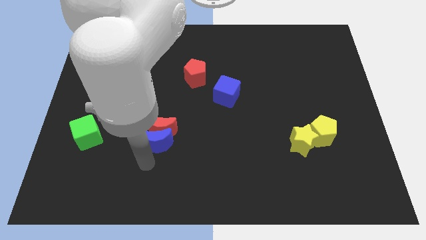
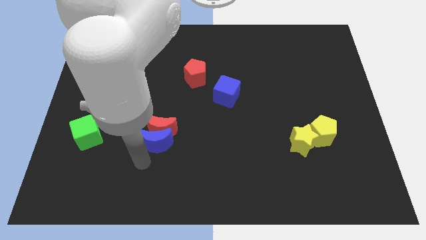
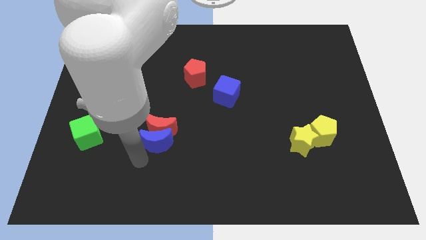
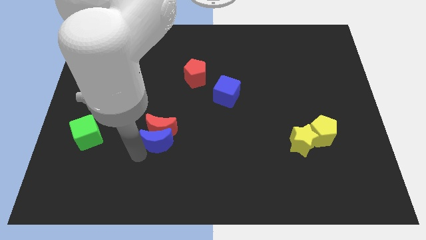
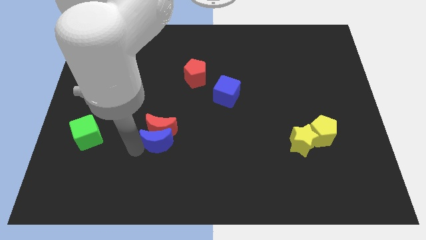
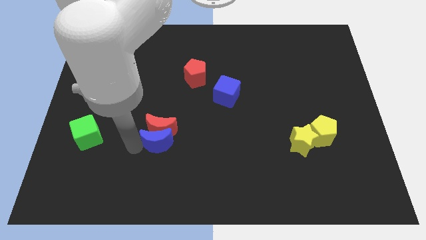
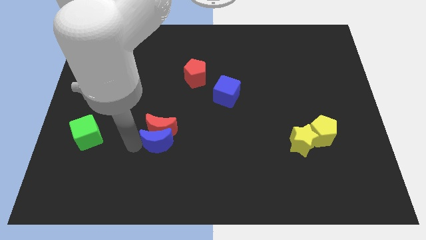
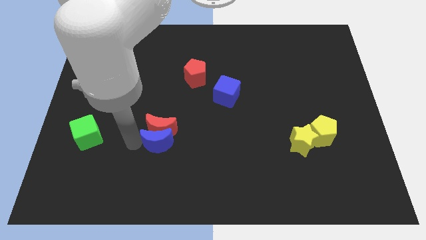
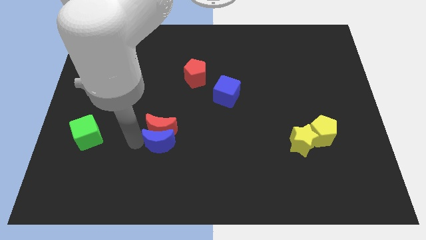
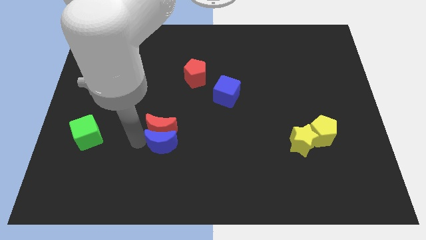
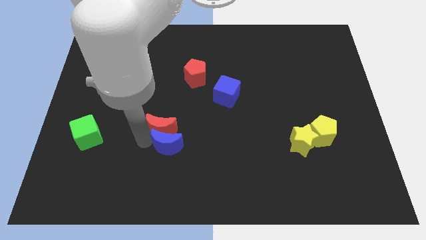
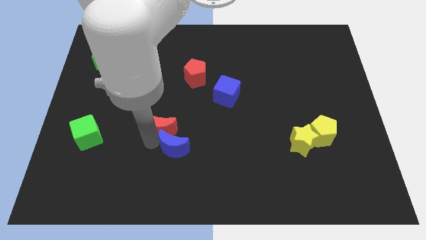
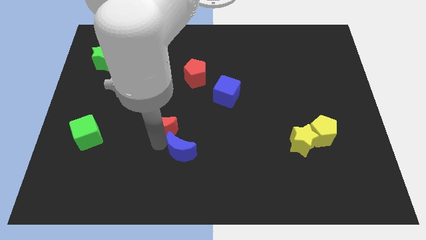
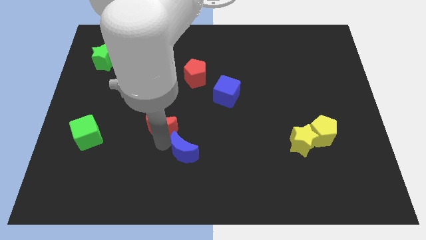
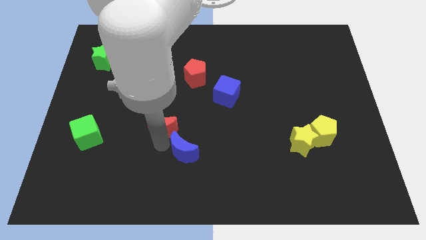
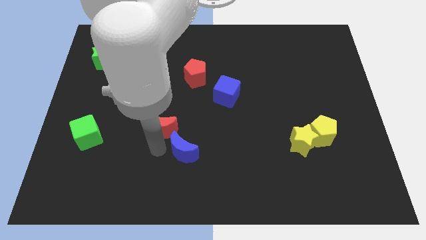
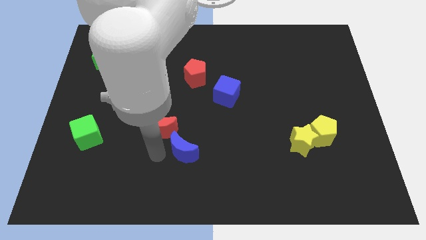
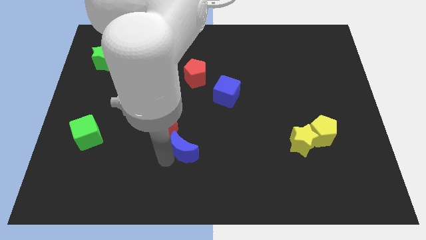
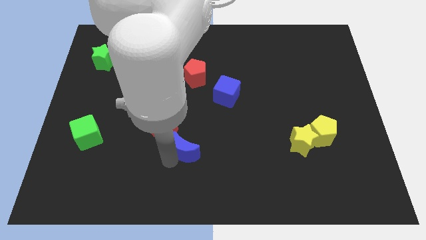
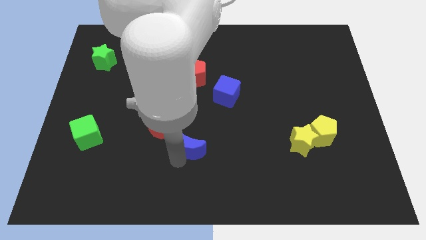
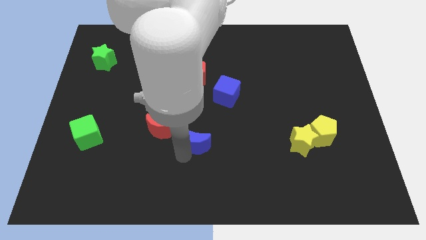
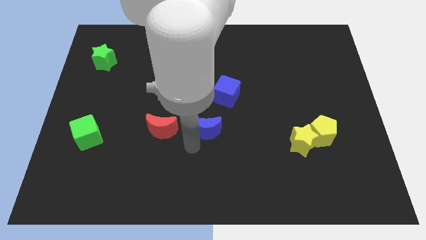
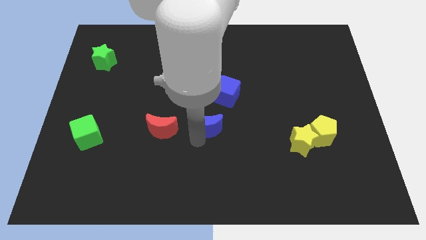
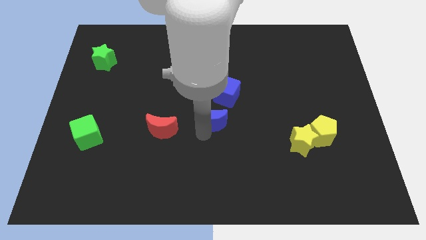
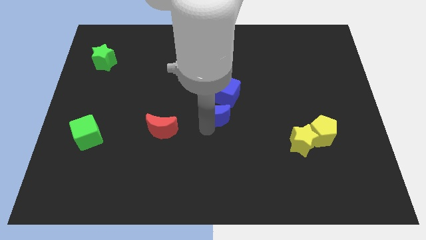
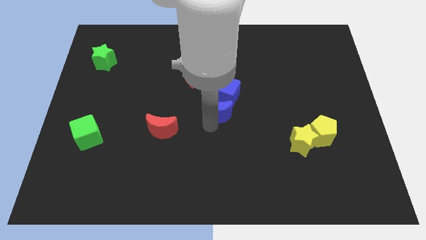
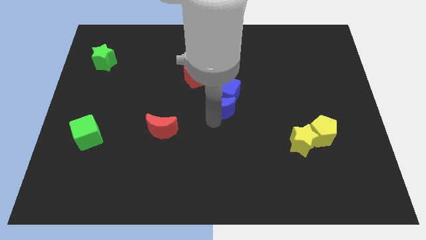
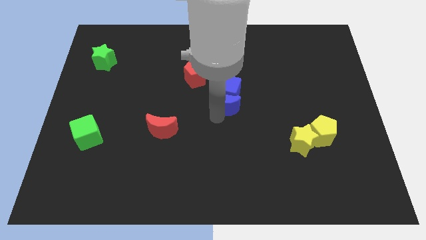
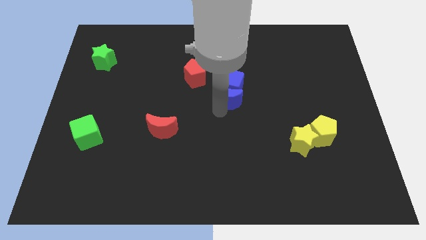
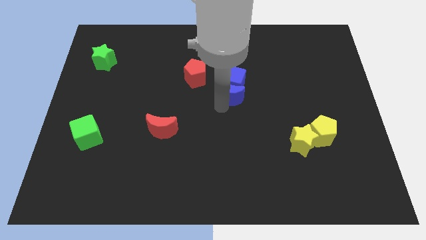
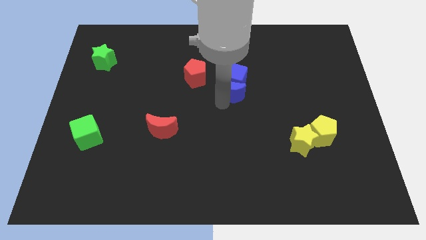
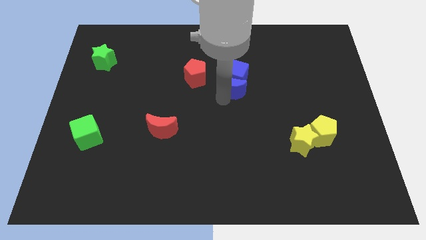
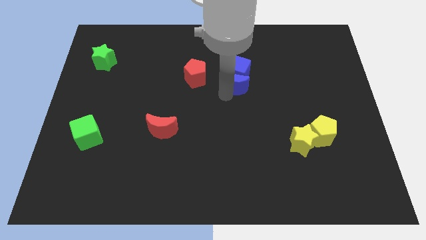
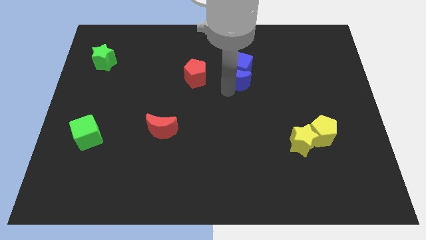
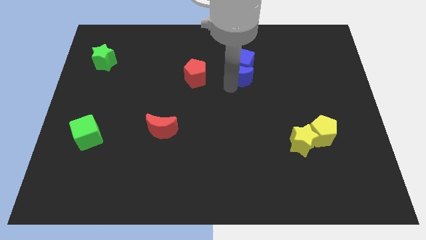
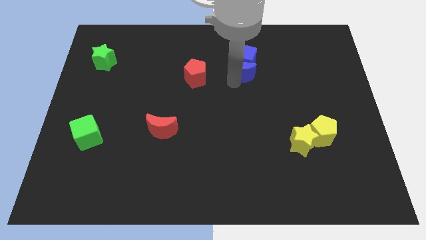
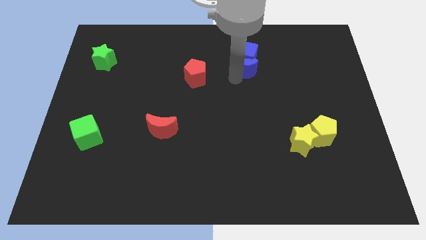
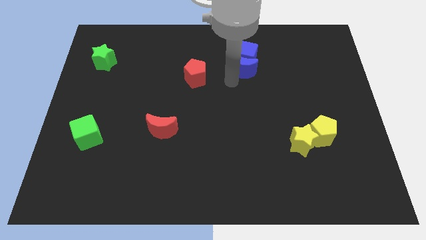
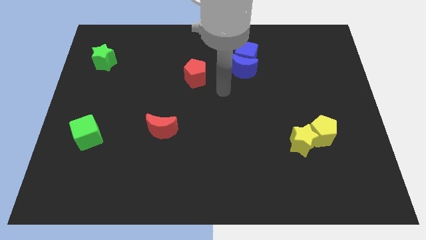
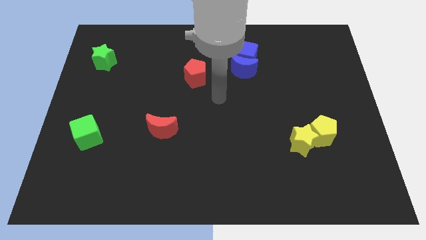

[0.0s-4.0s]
push the blue cube towards the top center with the blue moon

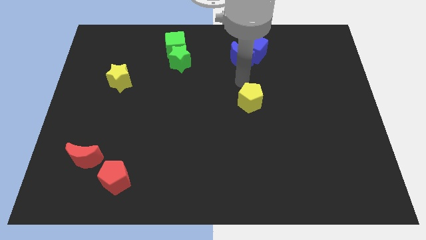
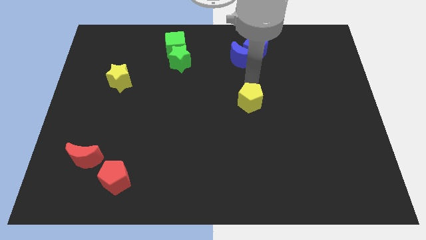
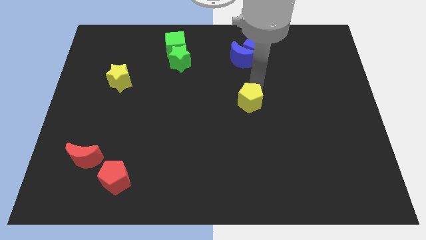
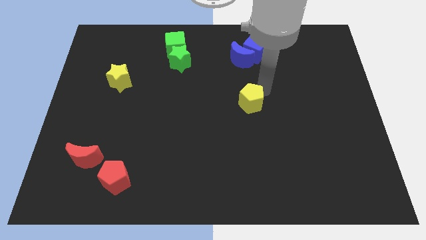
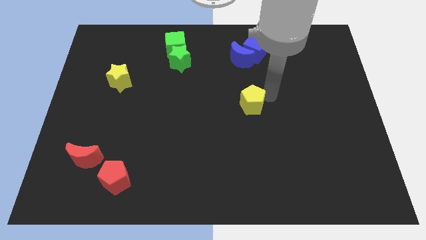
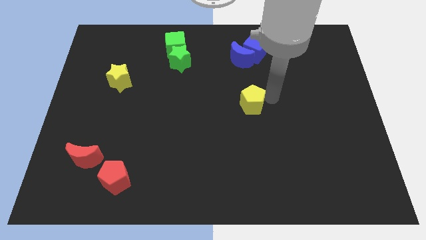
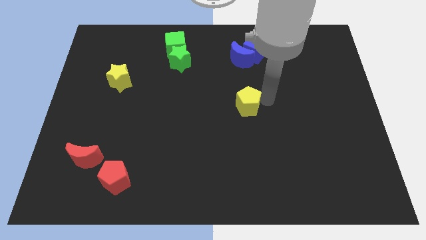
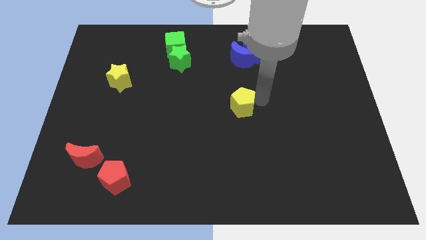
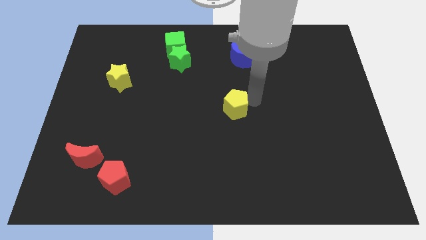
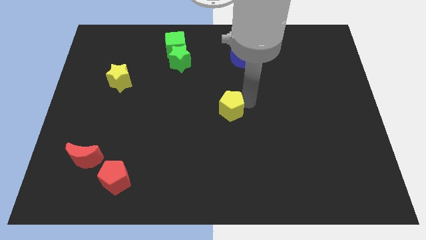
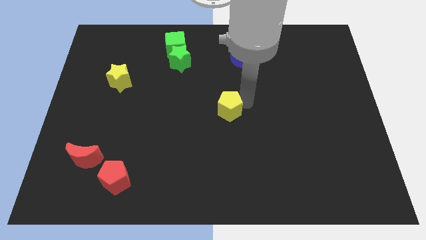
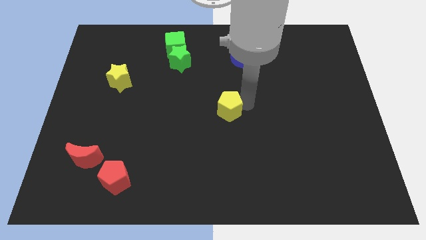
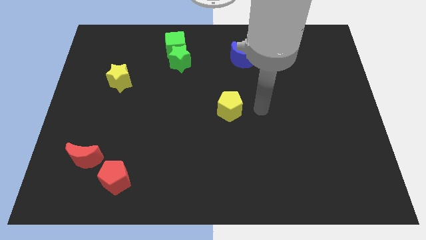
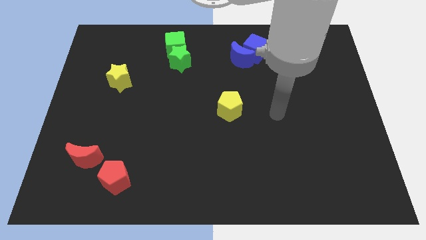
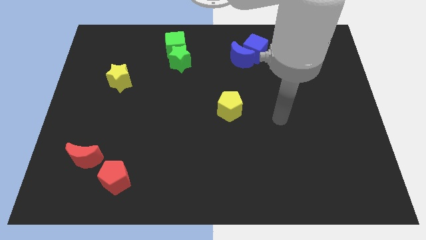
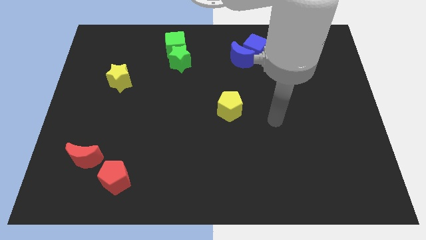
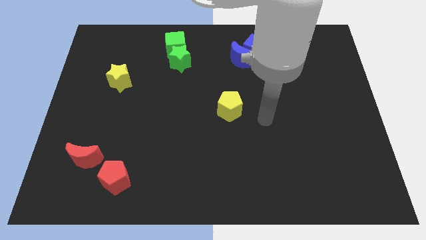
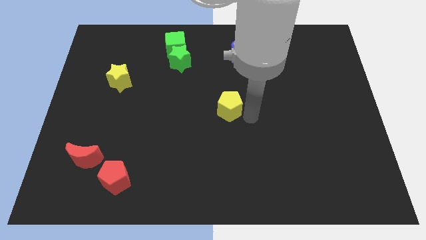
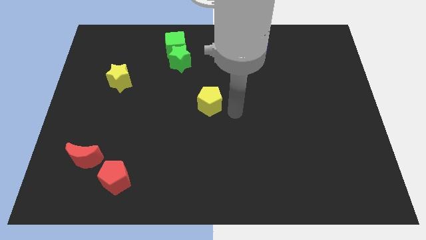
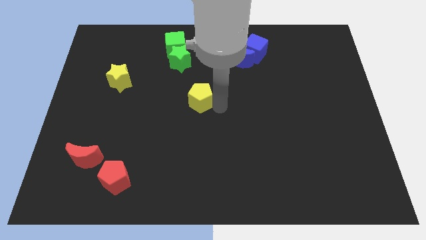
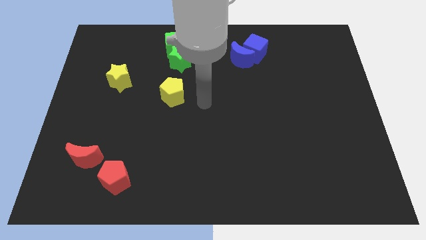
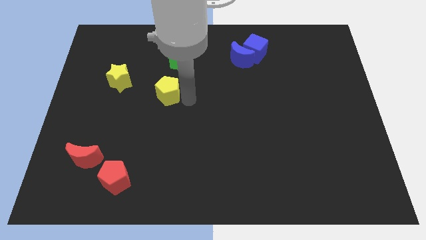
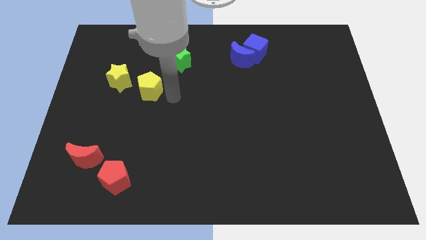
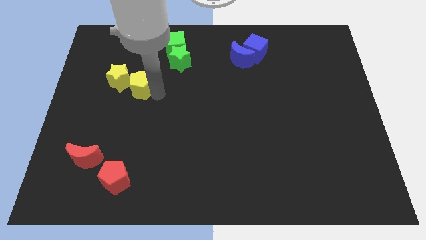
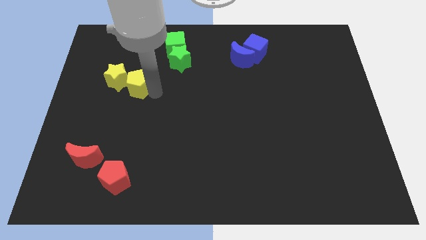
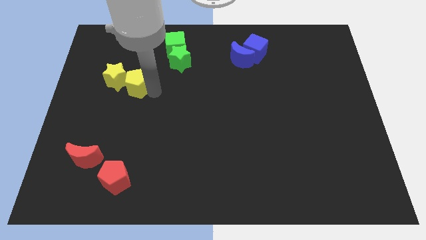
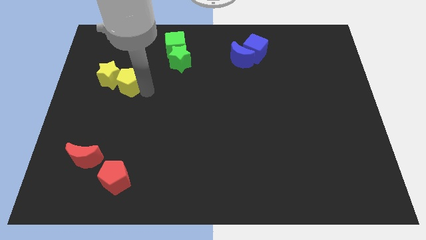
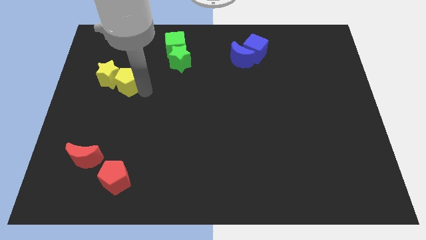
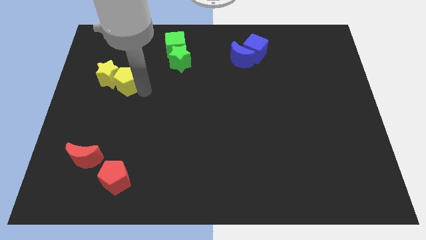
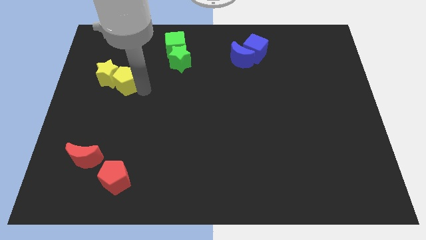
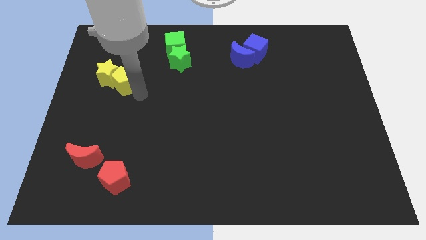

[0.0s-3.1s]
move yellow blocks towards center left

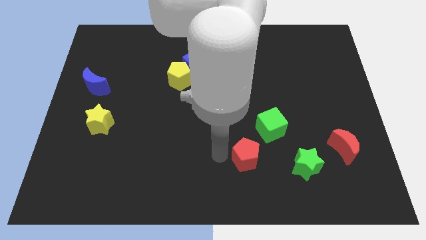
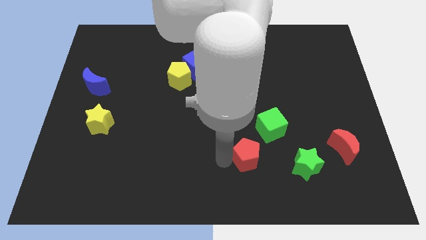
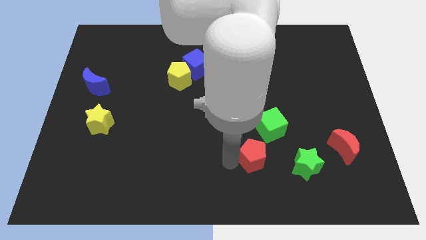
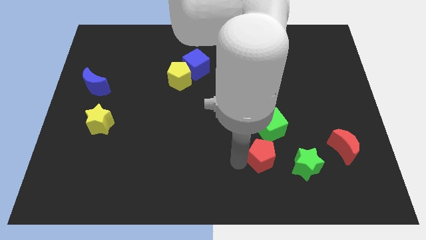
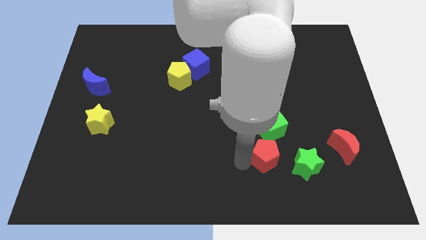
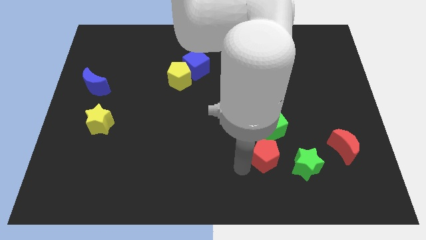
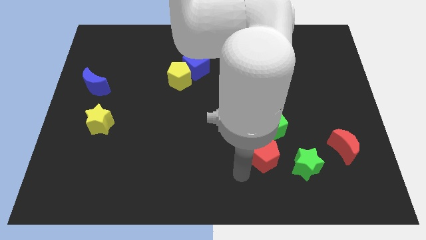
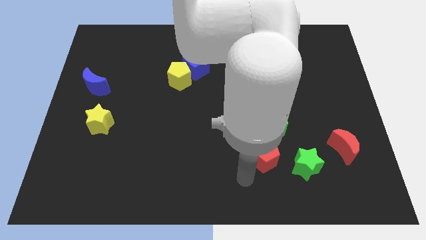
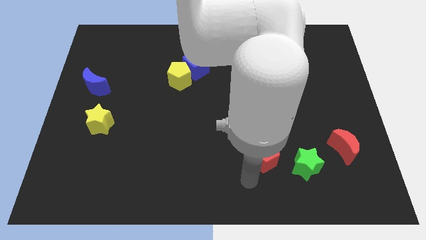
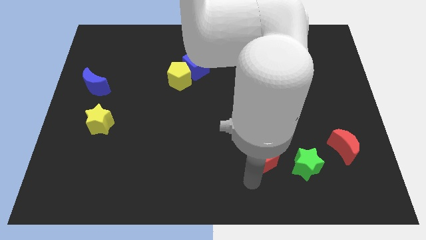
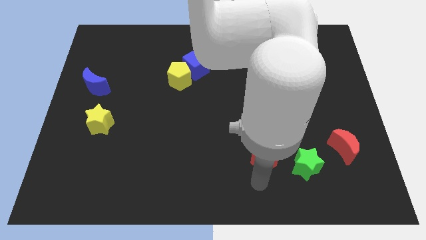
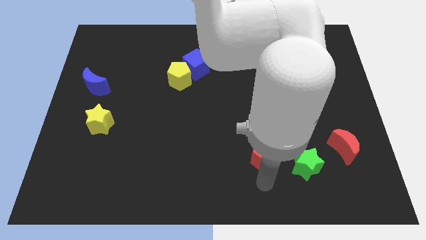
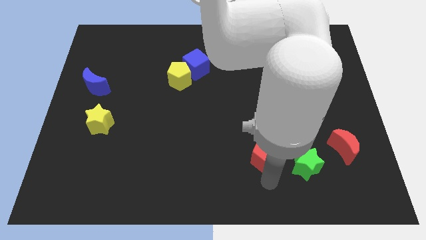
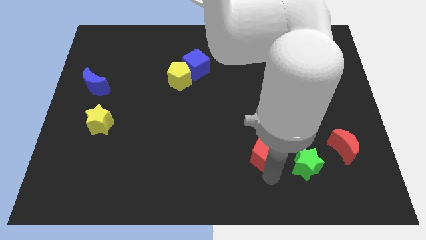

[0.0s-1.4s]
put the red pentagon at the bottom of green cube

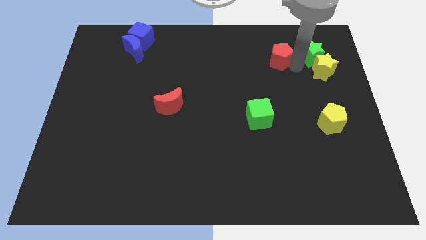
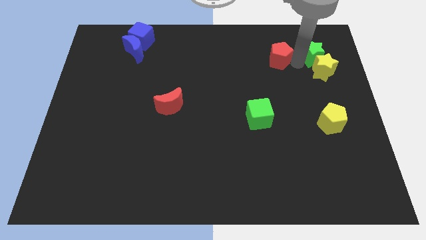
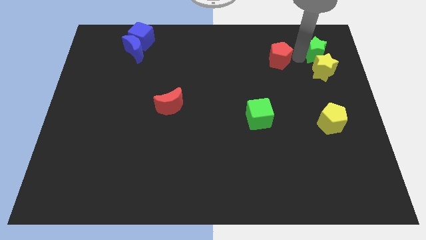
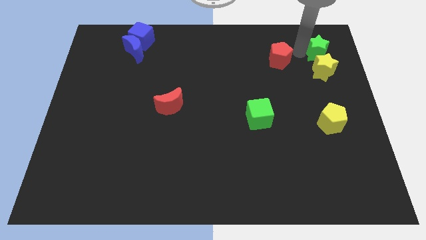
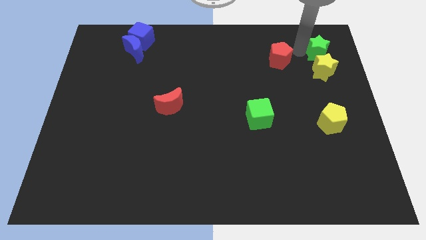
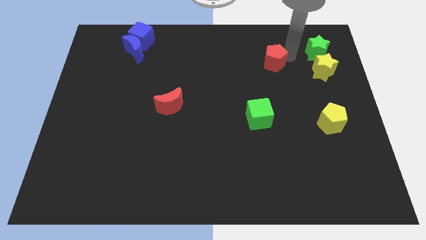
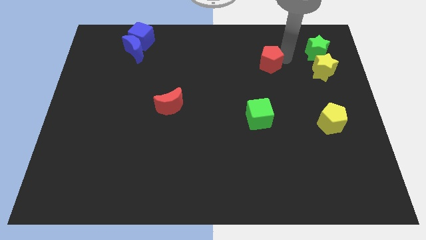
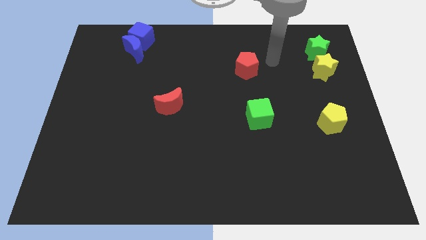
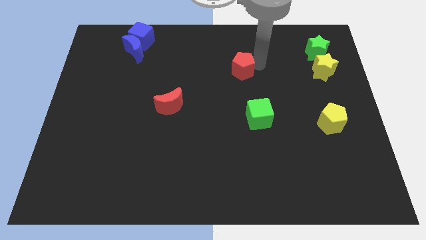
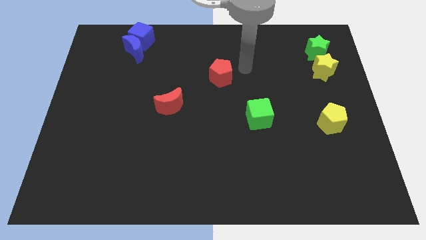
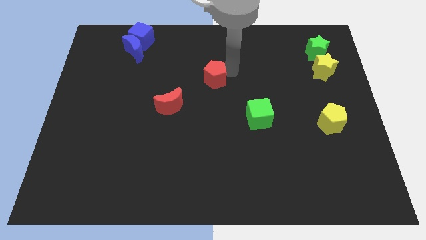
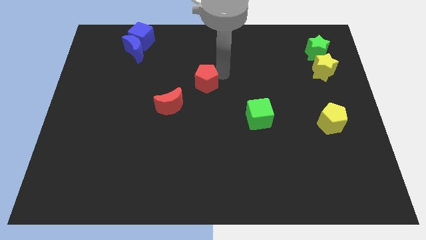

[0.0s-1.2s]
push the red pentagon towards red moon
